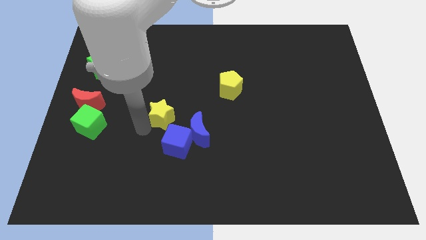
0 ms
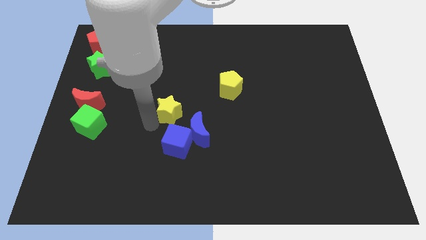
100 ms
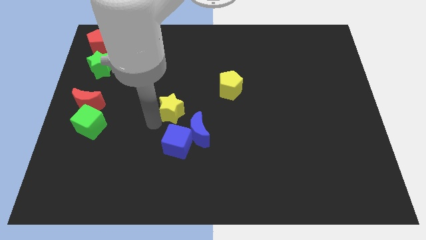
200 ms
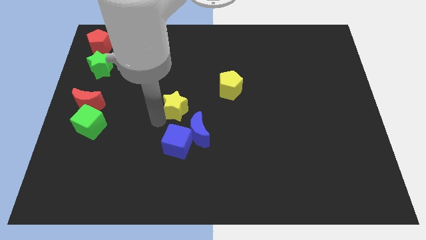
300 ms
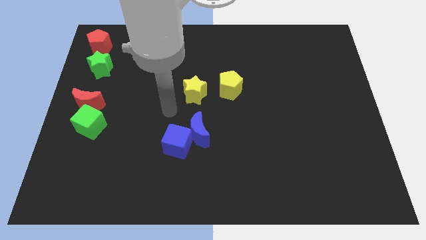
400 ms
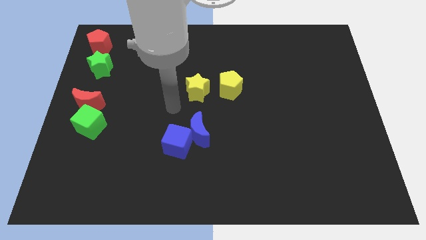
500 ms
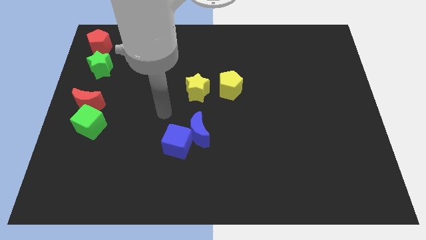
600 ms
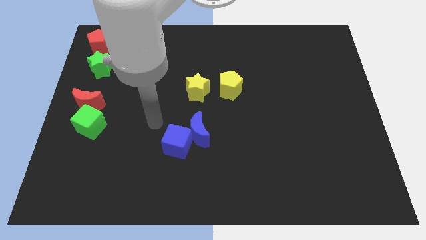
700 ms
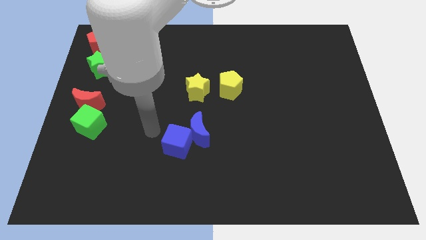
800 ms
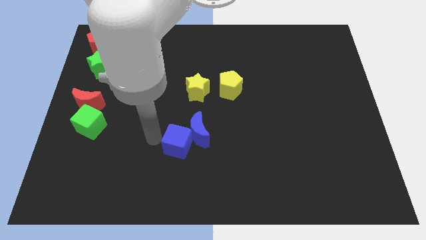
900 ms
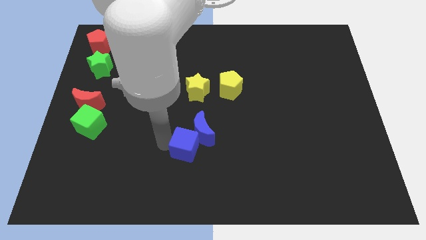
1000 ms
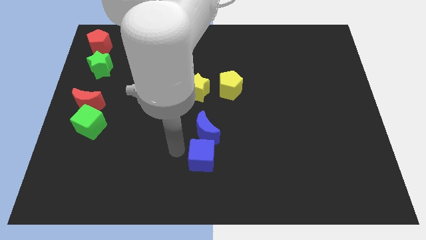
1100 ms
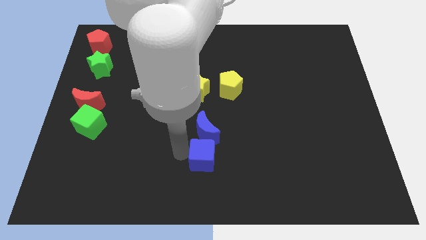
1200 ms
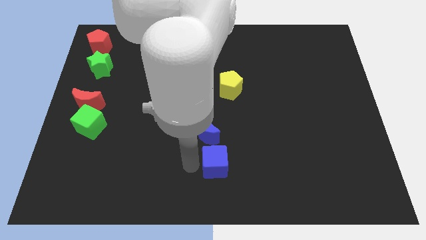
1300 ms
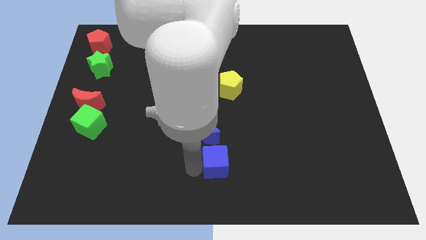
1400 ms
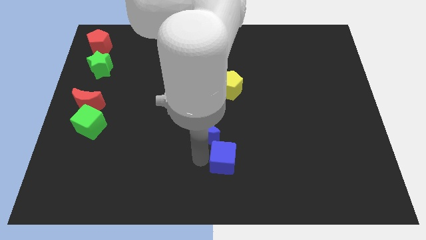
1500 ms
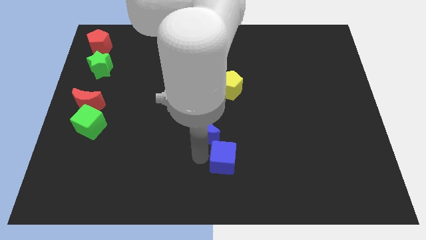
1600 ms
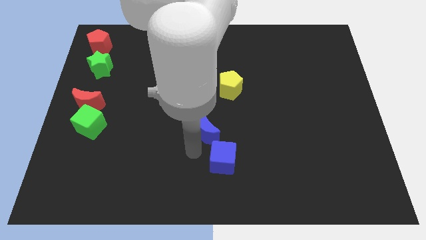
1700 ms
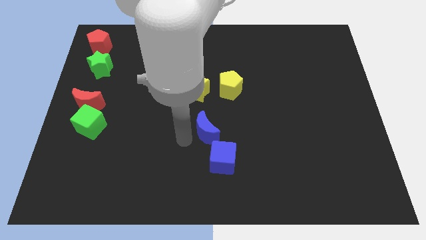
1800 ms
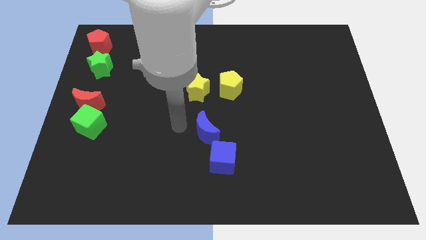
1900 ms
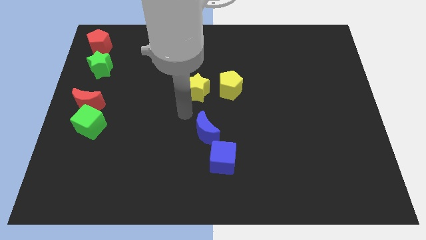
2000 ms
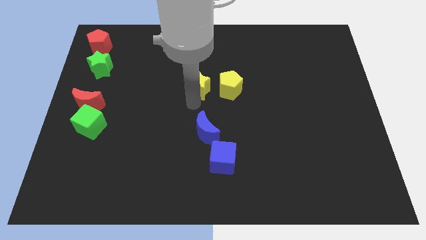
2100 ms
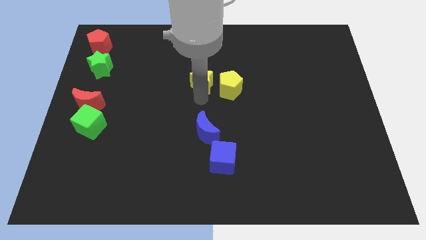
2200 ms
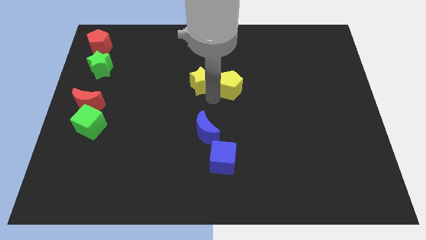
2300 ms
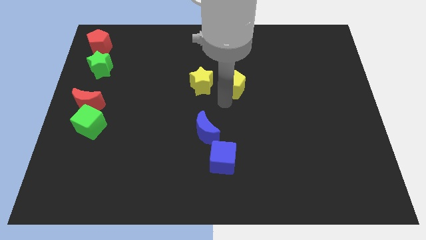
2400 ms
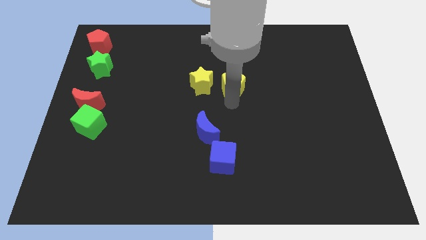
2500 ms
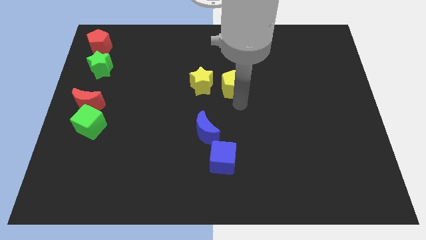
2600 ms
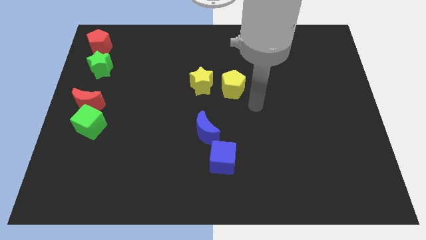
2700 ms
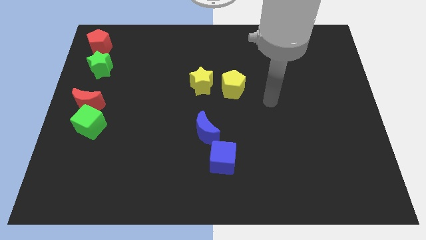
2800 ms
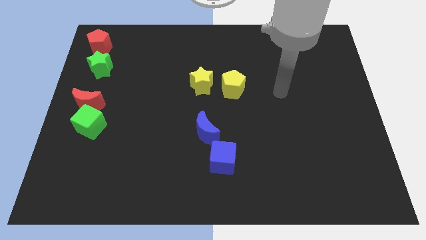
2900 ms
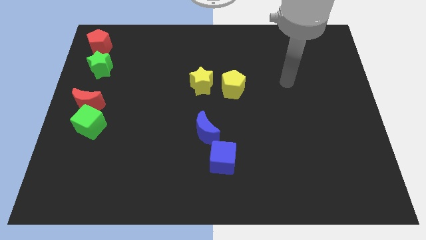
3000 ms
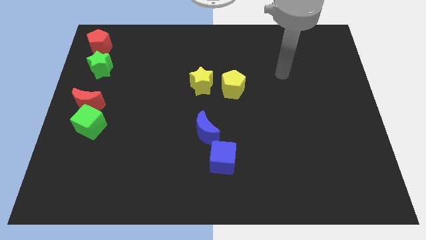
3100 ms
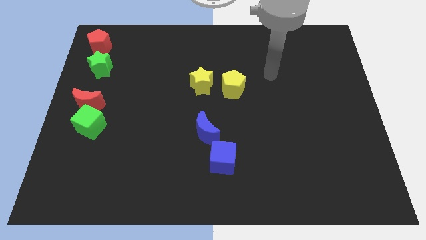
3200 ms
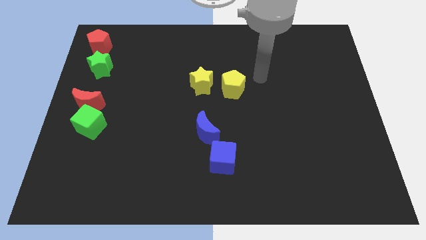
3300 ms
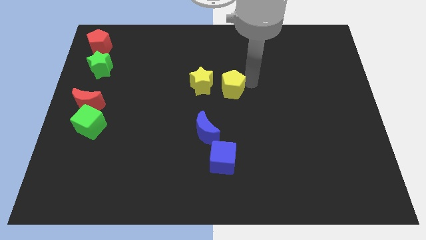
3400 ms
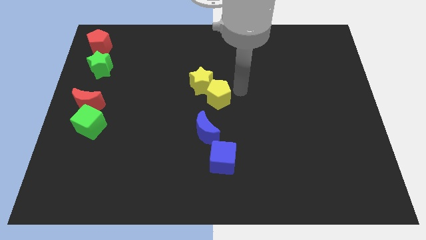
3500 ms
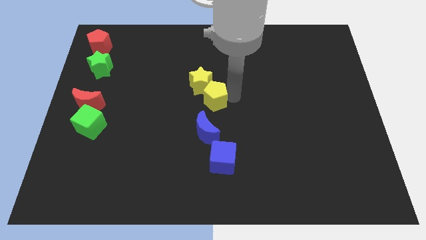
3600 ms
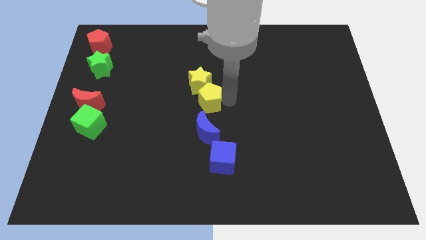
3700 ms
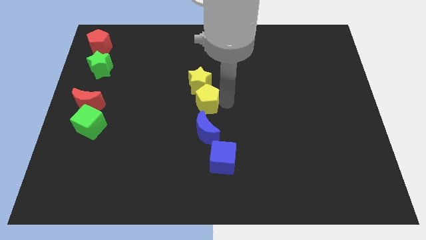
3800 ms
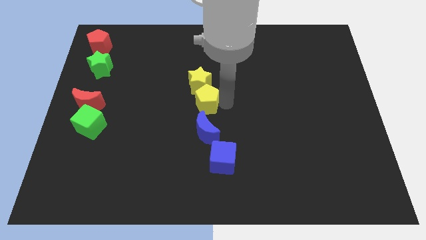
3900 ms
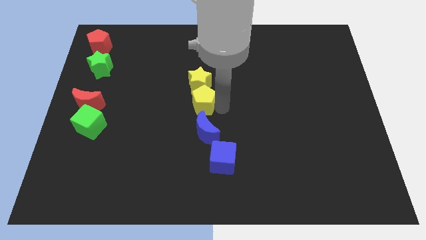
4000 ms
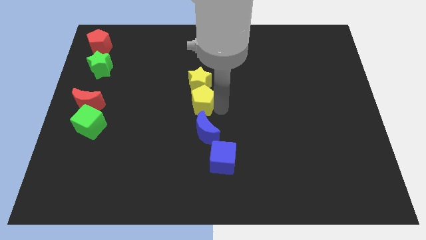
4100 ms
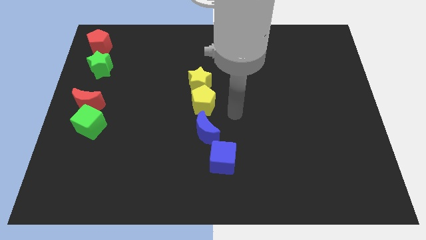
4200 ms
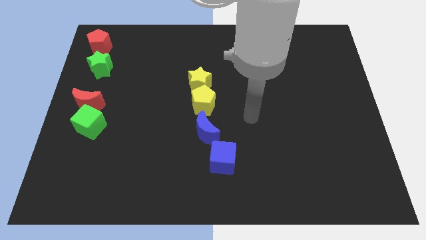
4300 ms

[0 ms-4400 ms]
place yellow pentagon between the yellow star and blue moon

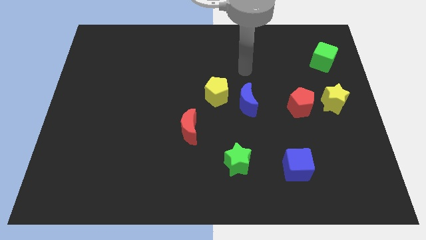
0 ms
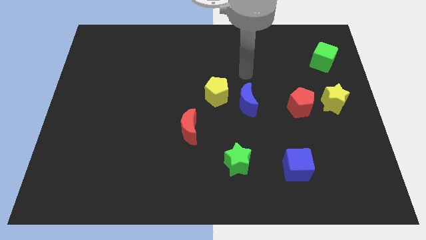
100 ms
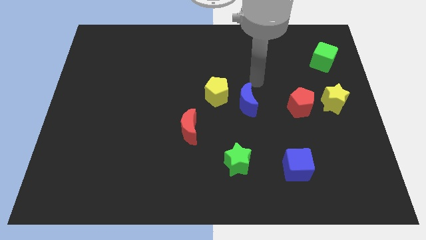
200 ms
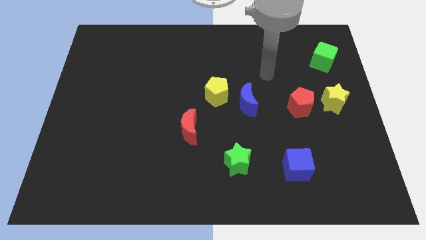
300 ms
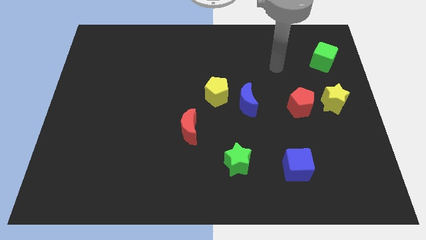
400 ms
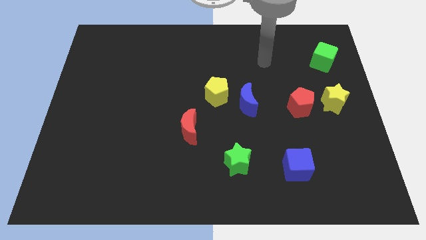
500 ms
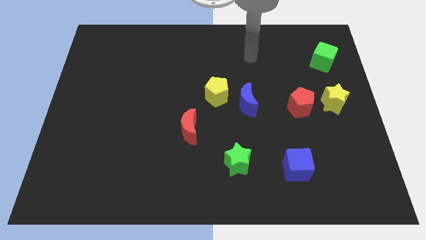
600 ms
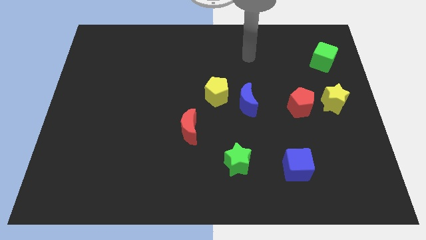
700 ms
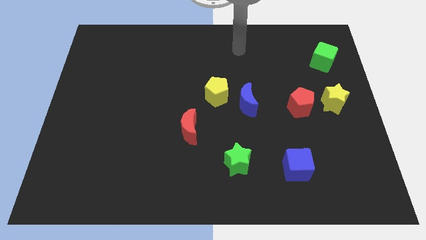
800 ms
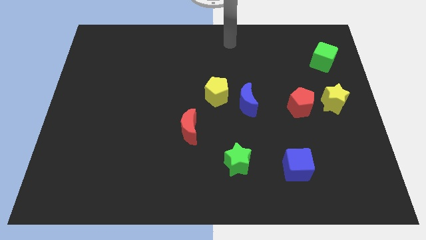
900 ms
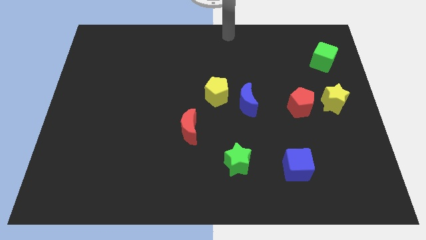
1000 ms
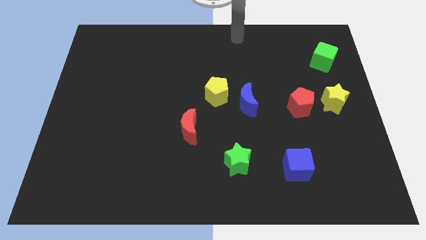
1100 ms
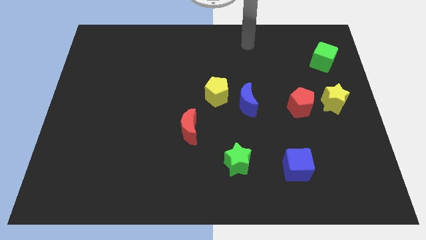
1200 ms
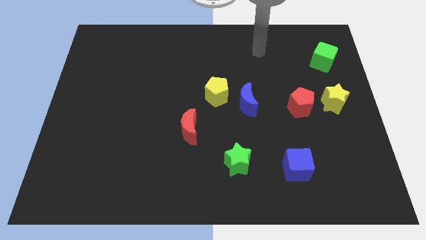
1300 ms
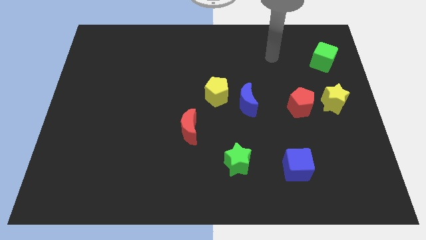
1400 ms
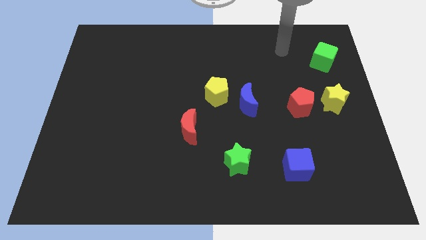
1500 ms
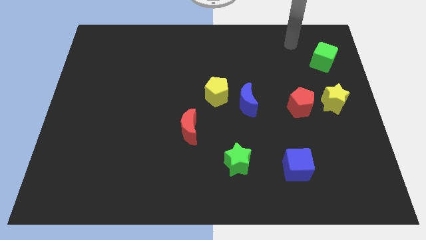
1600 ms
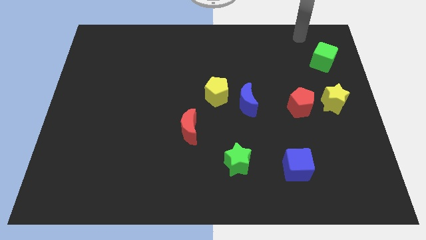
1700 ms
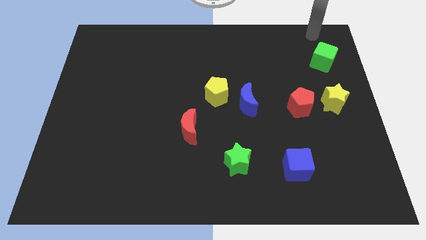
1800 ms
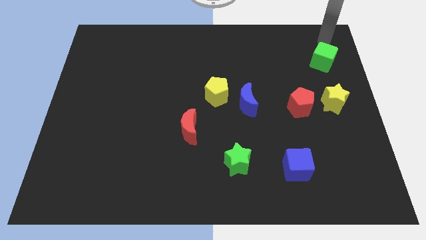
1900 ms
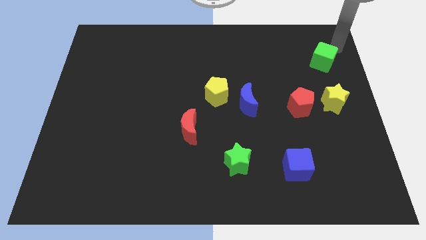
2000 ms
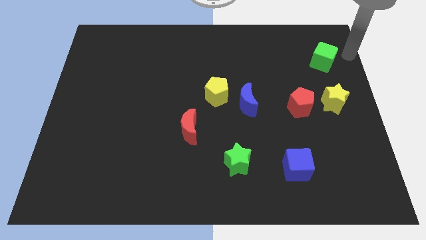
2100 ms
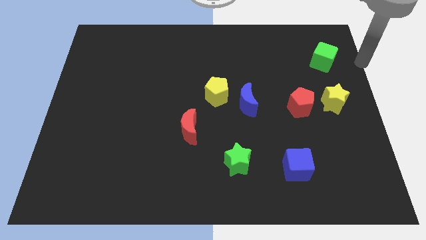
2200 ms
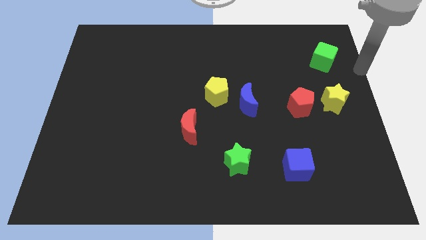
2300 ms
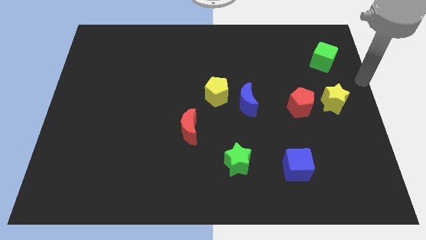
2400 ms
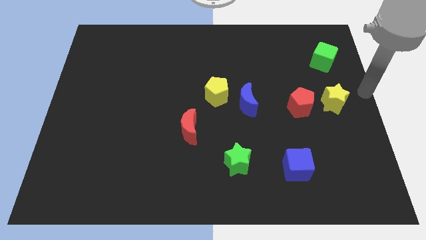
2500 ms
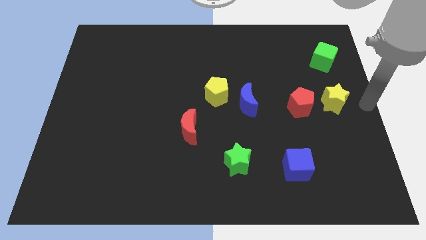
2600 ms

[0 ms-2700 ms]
move the arm to the right of the yellow star

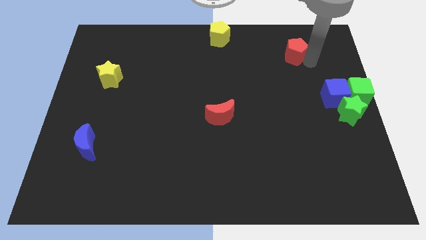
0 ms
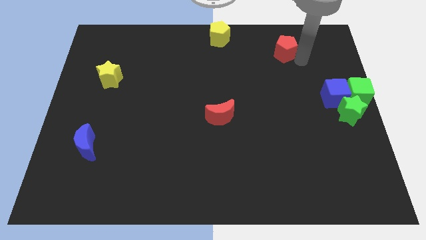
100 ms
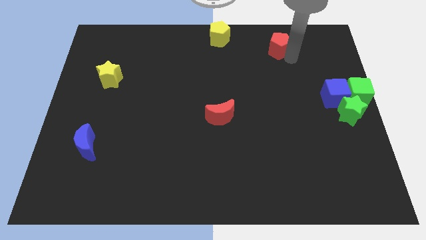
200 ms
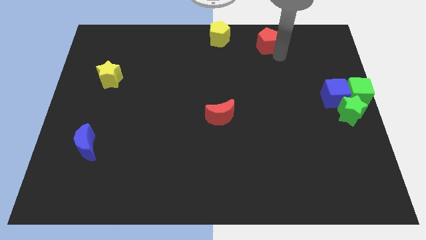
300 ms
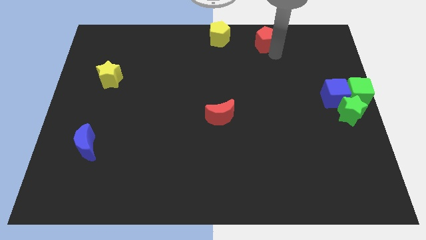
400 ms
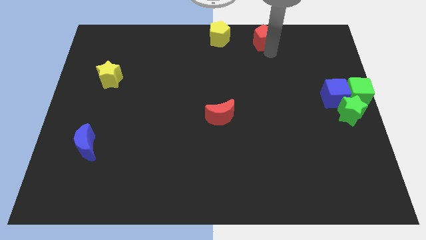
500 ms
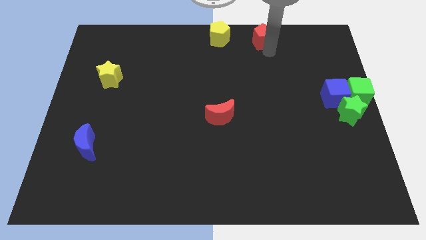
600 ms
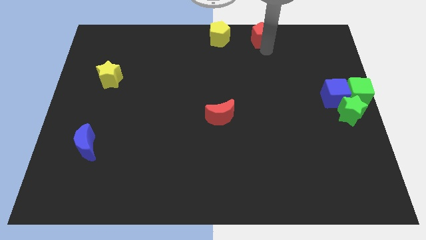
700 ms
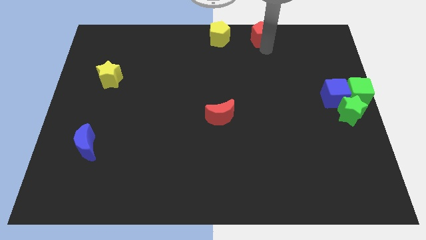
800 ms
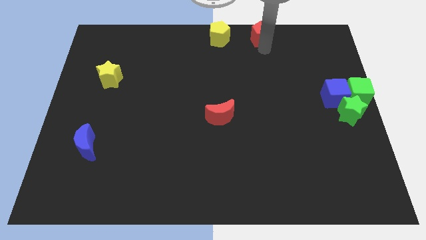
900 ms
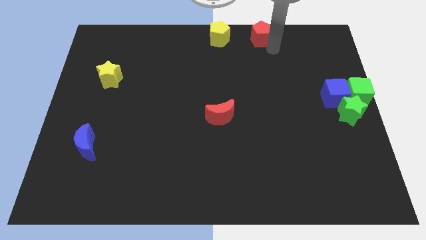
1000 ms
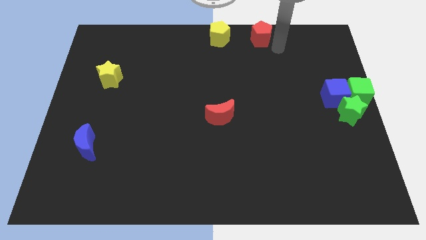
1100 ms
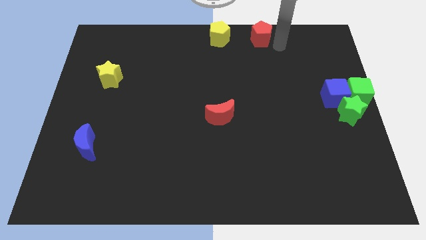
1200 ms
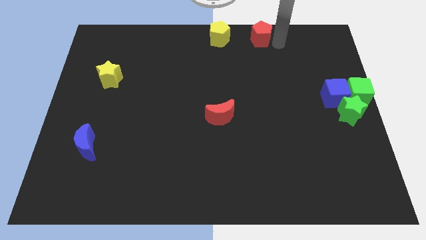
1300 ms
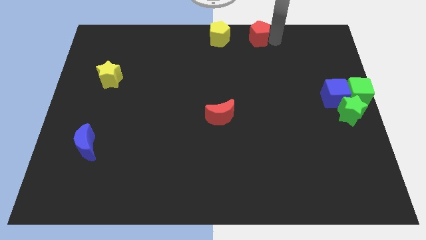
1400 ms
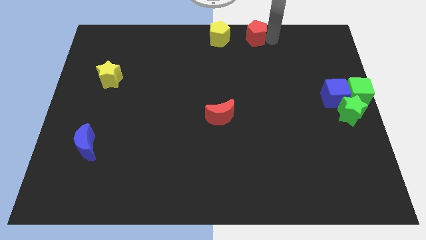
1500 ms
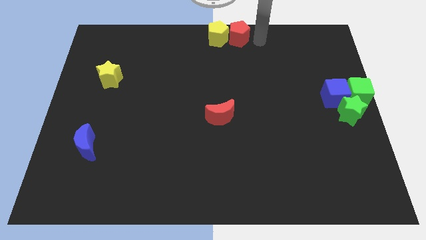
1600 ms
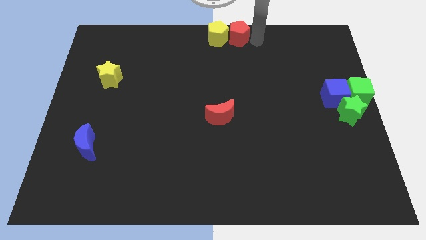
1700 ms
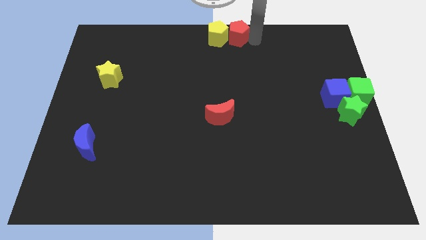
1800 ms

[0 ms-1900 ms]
move the red pentagon into the yellow pentagon
